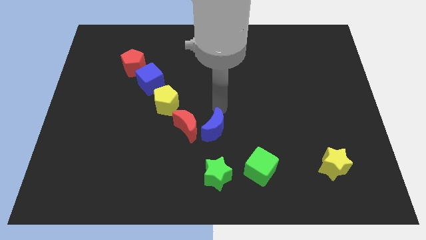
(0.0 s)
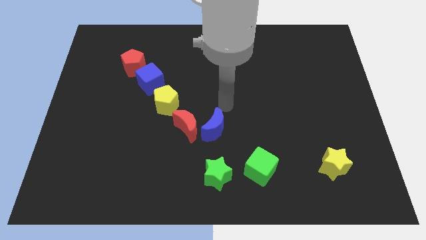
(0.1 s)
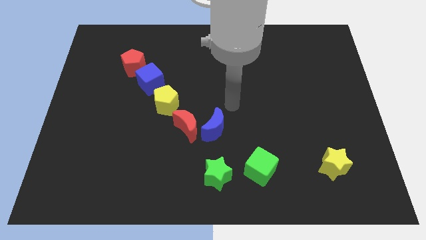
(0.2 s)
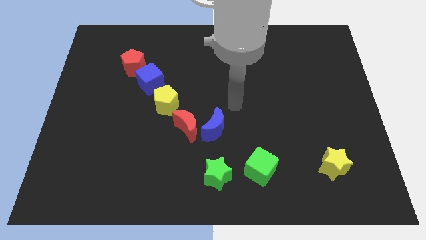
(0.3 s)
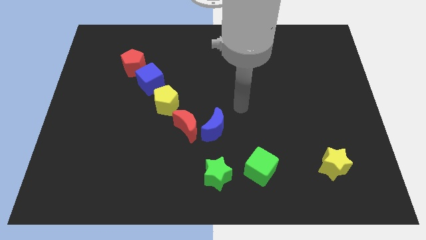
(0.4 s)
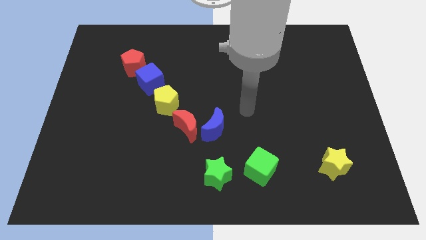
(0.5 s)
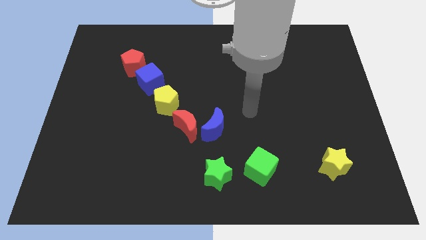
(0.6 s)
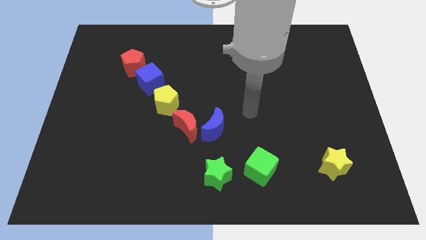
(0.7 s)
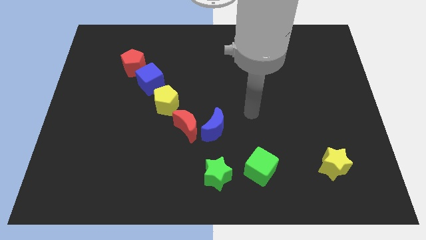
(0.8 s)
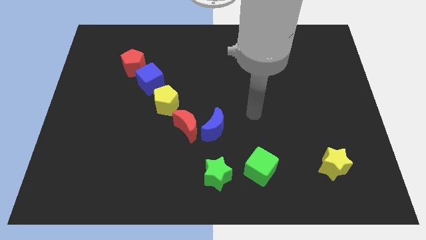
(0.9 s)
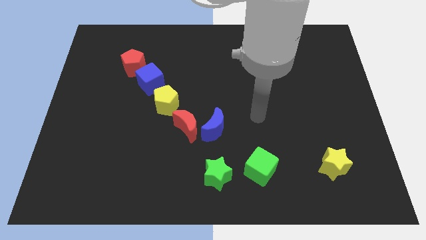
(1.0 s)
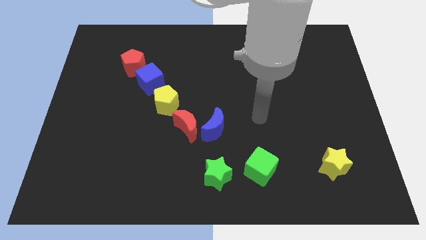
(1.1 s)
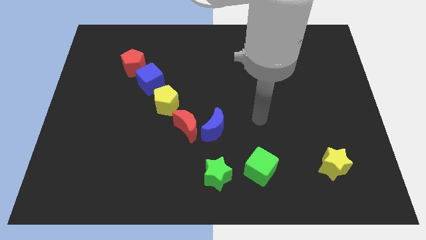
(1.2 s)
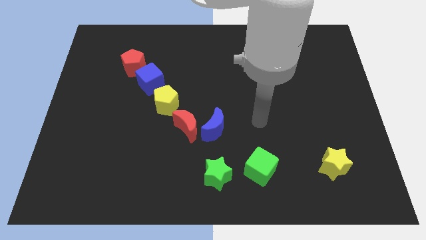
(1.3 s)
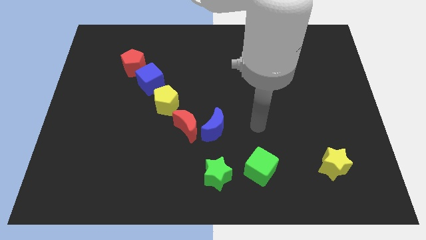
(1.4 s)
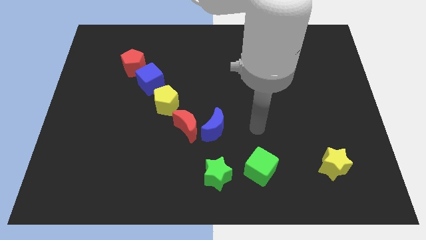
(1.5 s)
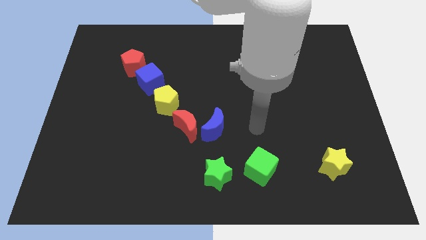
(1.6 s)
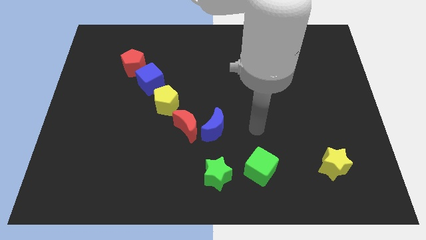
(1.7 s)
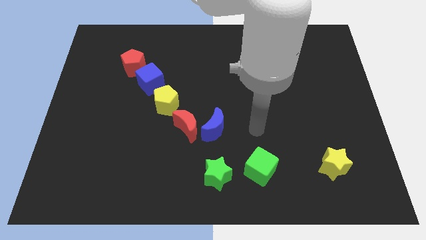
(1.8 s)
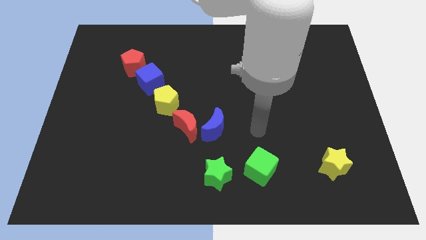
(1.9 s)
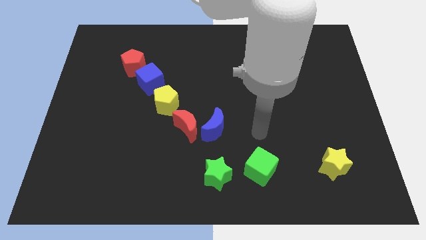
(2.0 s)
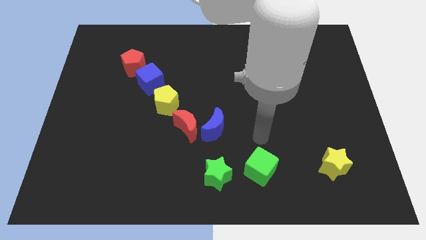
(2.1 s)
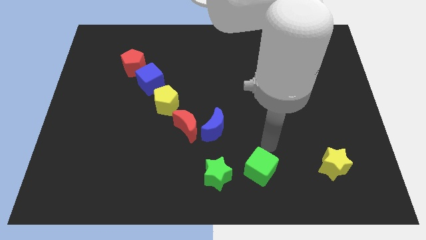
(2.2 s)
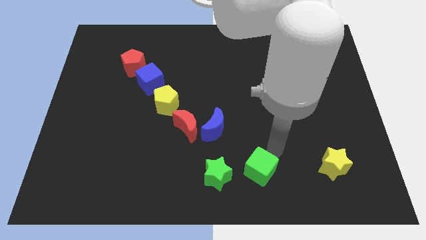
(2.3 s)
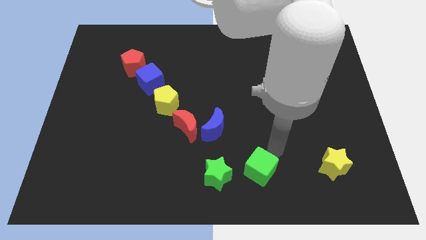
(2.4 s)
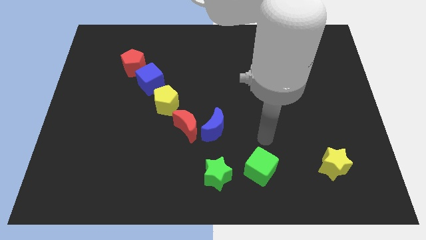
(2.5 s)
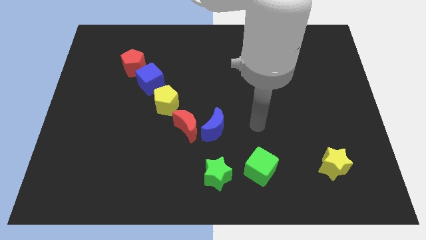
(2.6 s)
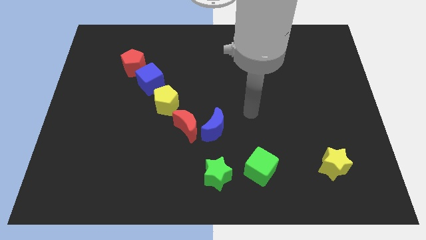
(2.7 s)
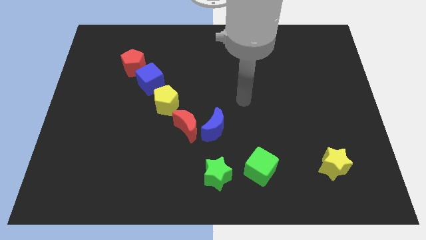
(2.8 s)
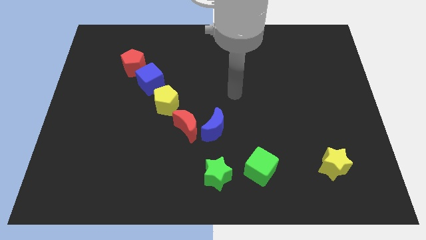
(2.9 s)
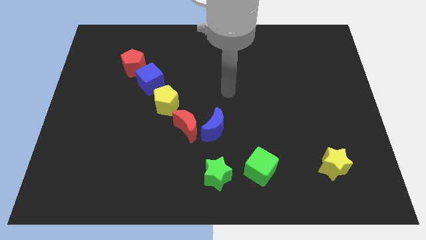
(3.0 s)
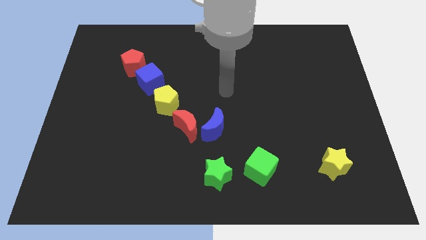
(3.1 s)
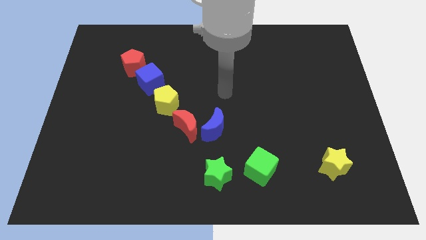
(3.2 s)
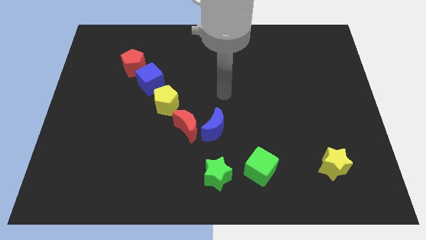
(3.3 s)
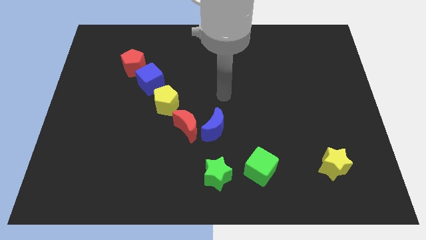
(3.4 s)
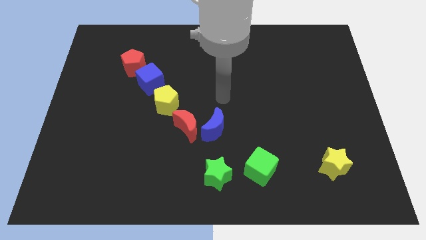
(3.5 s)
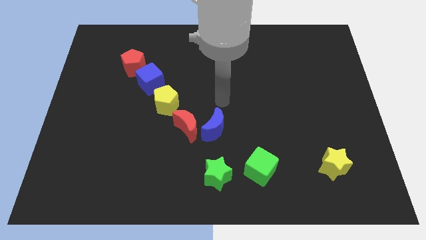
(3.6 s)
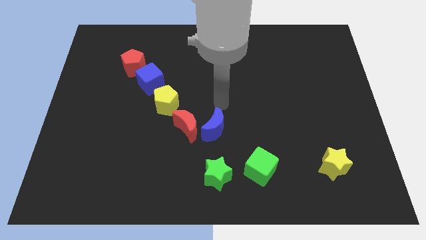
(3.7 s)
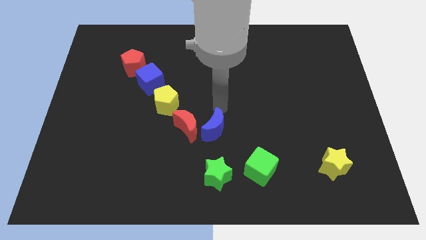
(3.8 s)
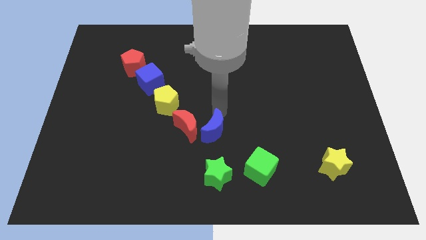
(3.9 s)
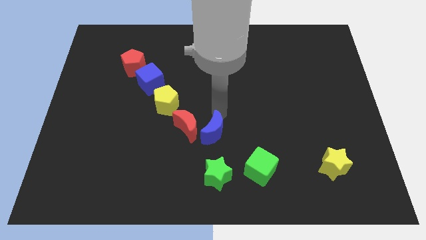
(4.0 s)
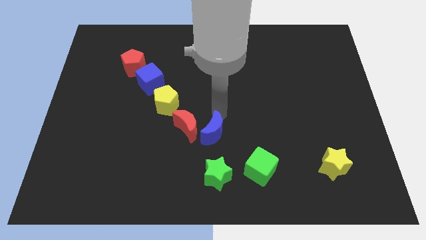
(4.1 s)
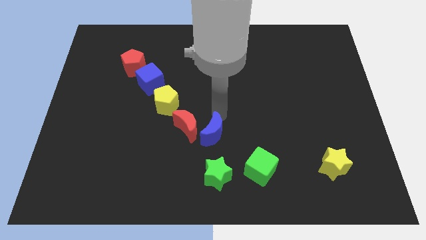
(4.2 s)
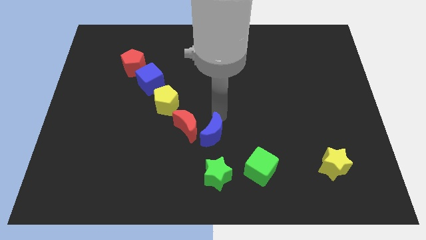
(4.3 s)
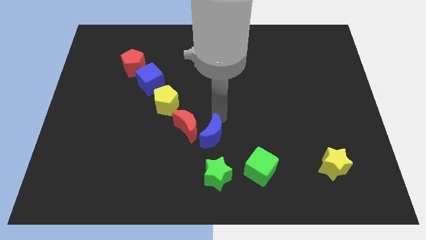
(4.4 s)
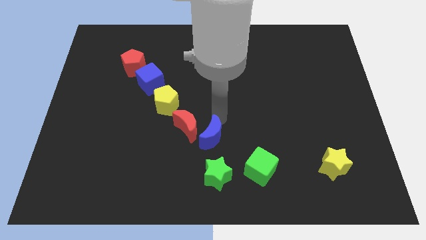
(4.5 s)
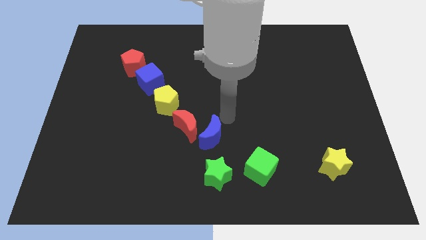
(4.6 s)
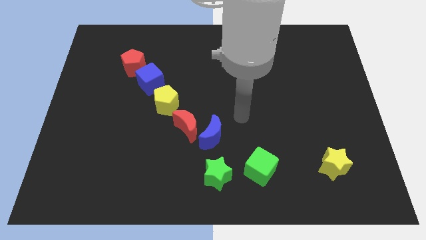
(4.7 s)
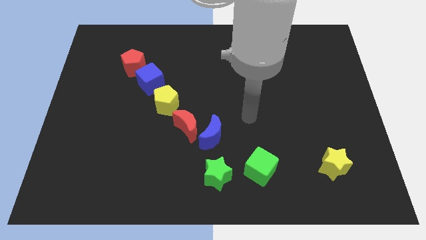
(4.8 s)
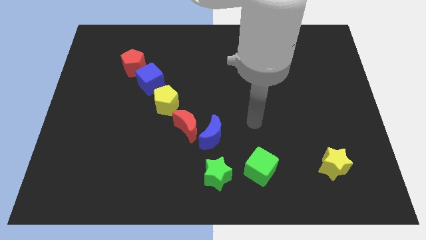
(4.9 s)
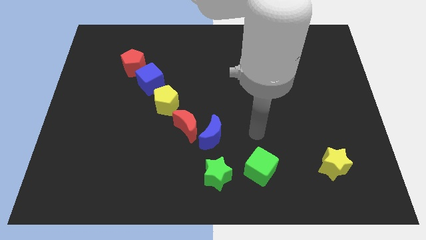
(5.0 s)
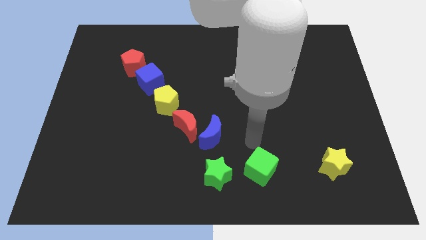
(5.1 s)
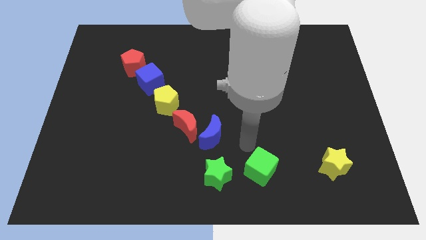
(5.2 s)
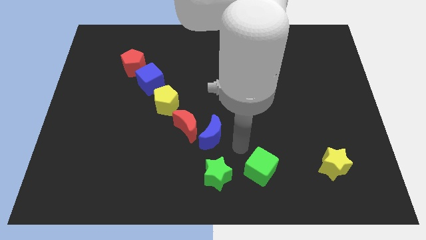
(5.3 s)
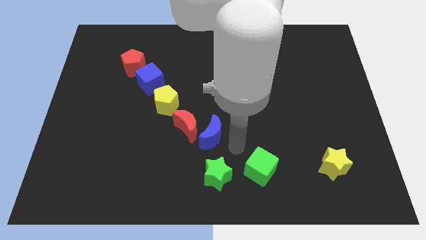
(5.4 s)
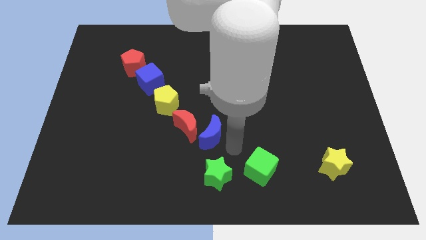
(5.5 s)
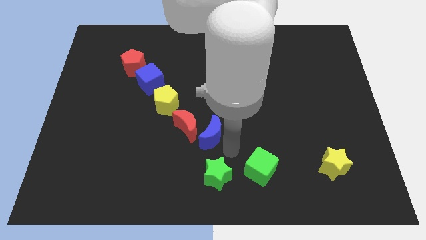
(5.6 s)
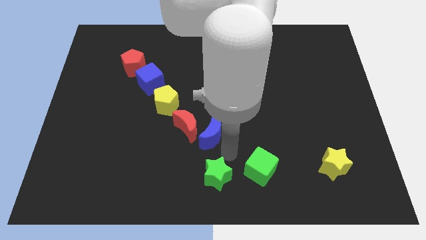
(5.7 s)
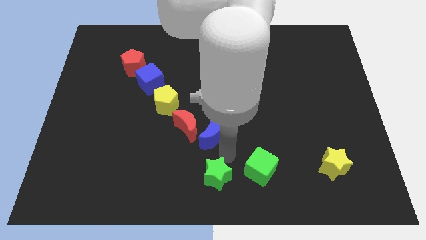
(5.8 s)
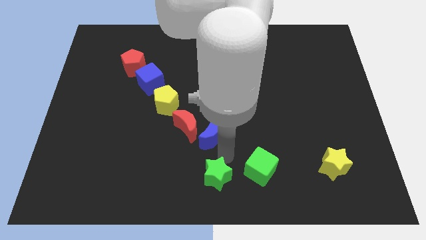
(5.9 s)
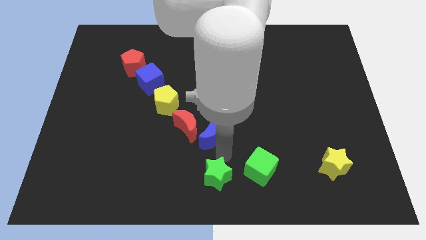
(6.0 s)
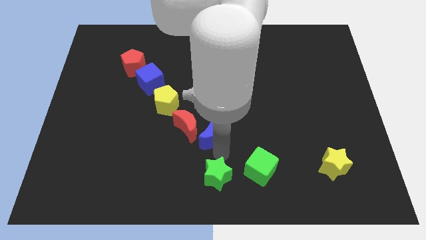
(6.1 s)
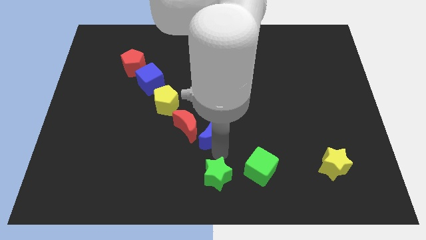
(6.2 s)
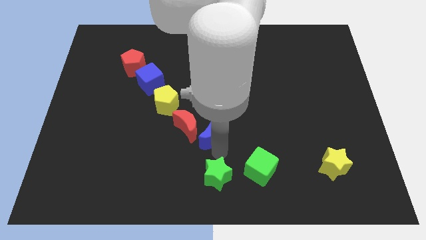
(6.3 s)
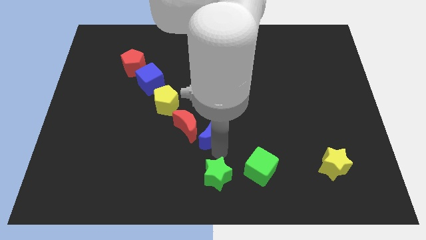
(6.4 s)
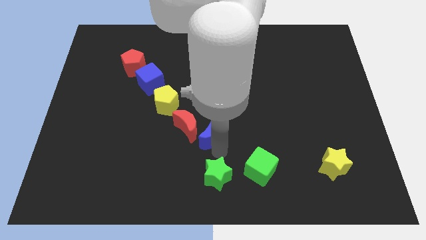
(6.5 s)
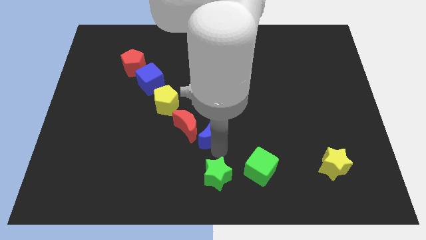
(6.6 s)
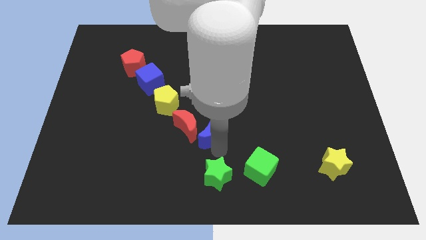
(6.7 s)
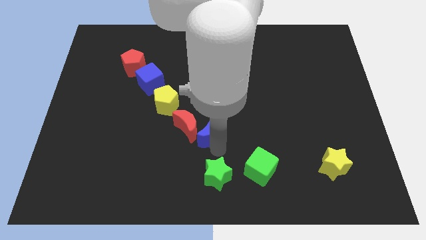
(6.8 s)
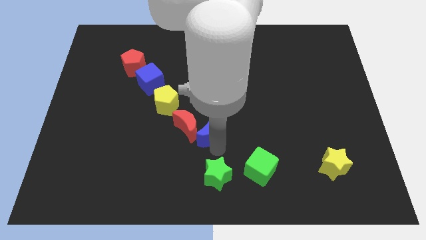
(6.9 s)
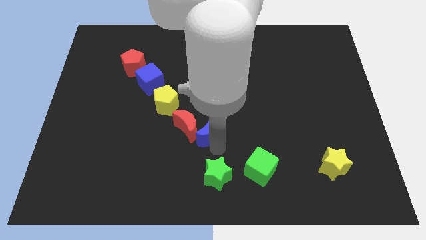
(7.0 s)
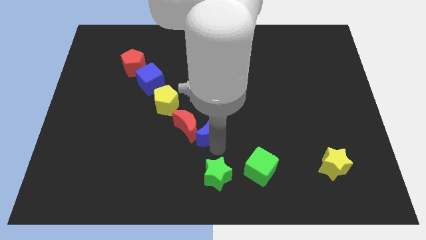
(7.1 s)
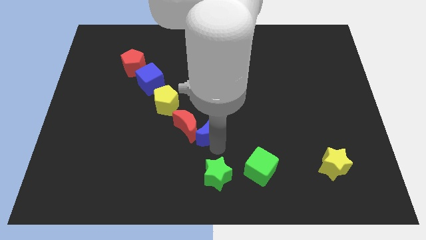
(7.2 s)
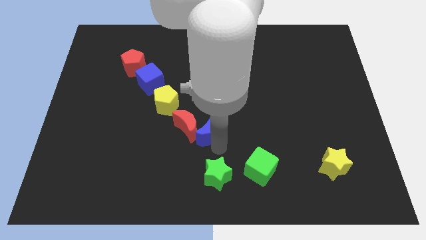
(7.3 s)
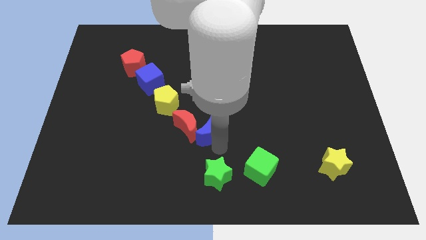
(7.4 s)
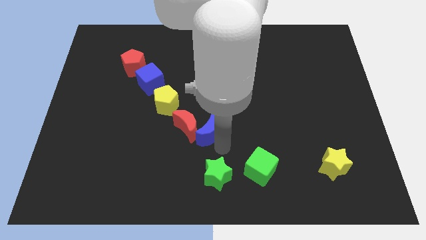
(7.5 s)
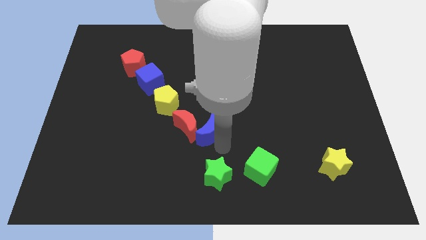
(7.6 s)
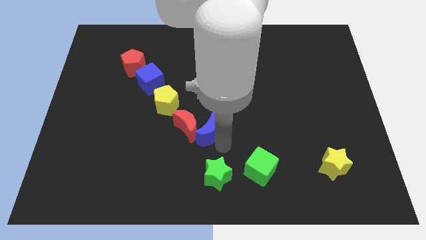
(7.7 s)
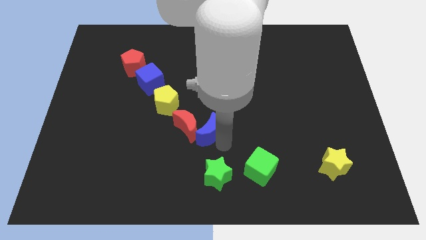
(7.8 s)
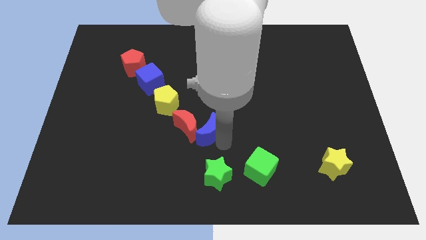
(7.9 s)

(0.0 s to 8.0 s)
place blue crescent to one of the edge to red crescent

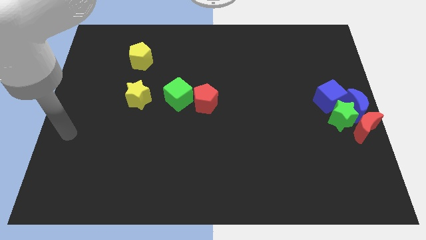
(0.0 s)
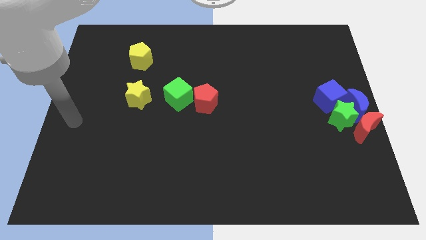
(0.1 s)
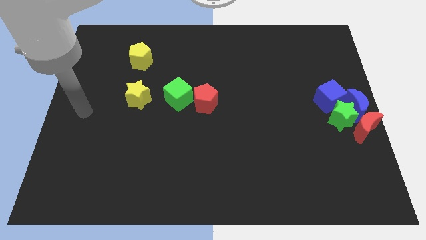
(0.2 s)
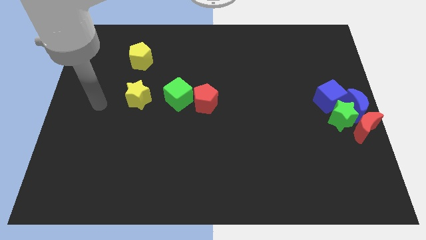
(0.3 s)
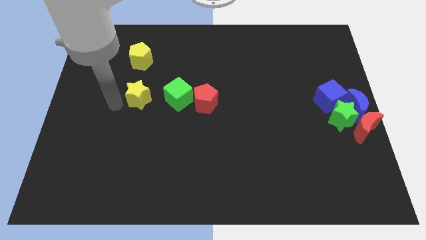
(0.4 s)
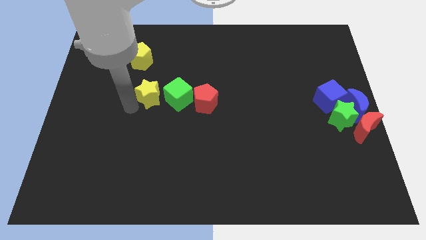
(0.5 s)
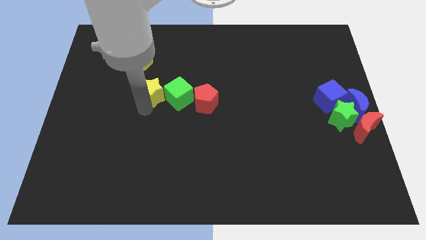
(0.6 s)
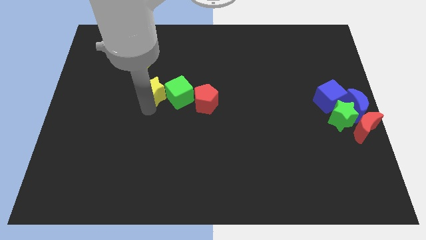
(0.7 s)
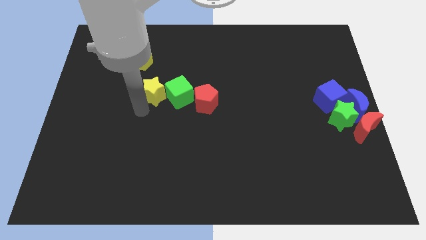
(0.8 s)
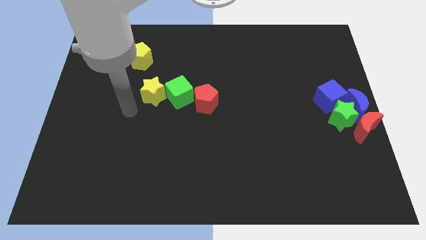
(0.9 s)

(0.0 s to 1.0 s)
push the yellow star into the green cube

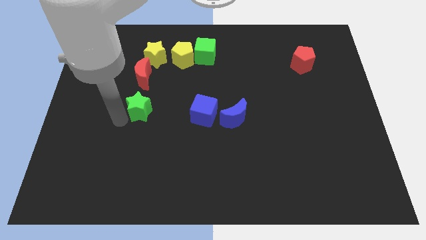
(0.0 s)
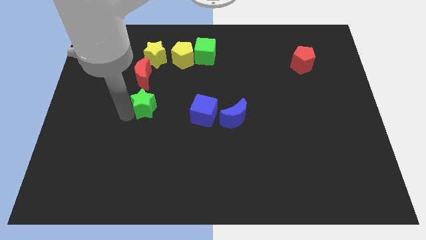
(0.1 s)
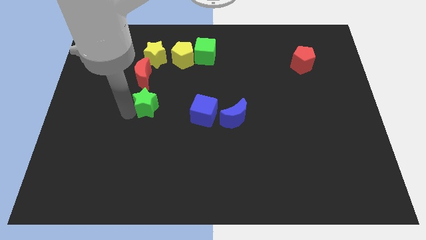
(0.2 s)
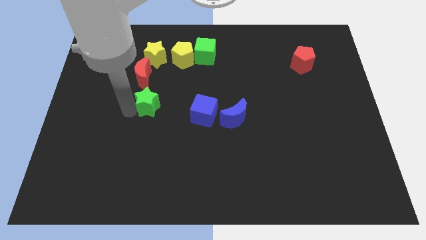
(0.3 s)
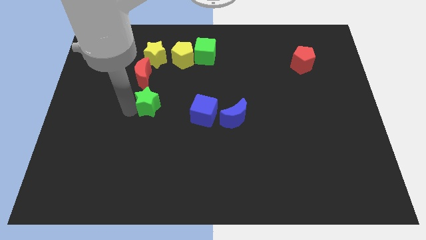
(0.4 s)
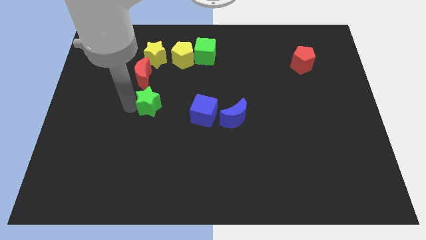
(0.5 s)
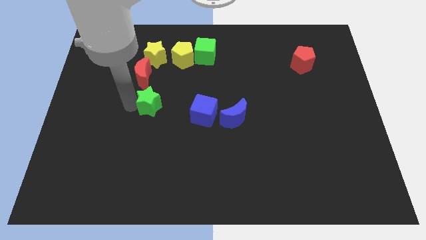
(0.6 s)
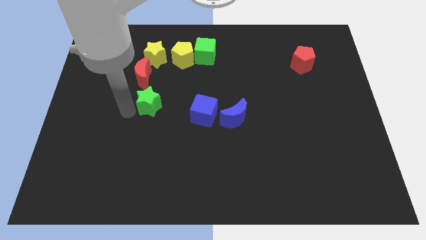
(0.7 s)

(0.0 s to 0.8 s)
move the green star down to the red moon
